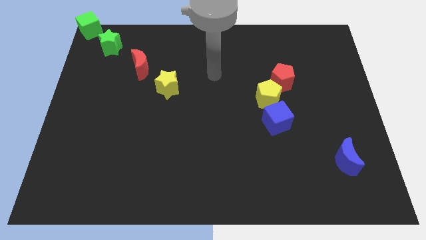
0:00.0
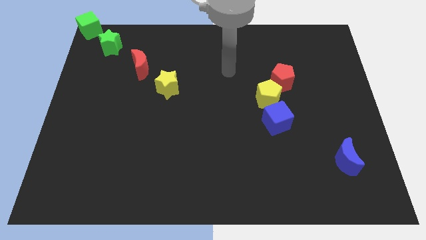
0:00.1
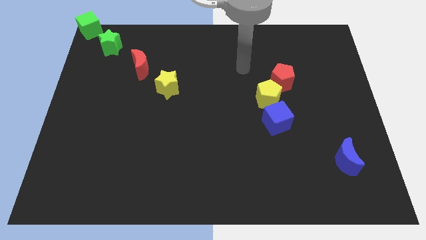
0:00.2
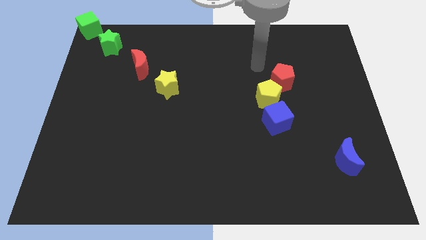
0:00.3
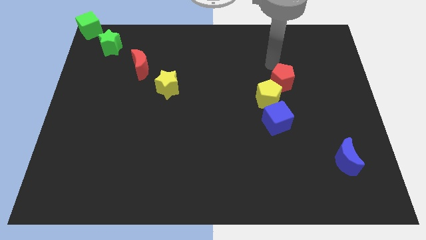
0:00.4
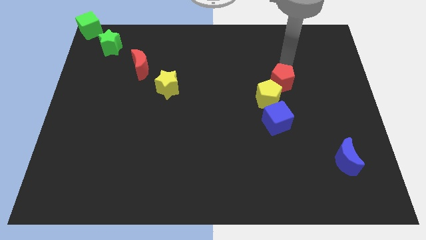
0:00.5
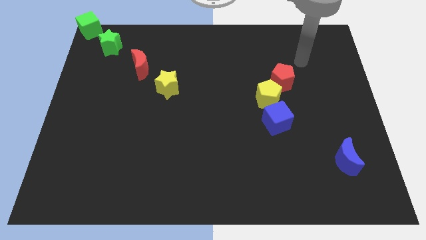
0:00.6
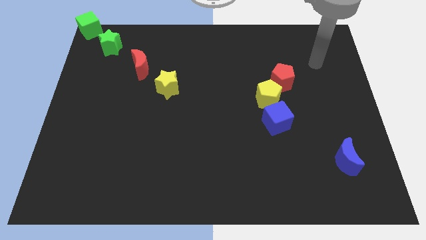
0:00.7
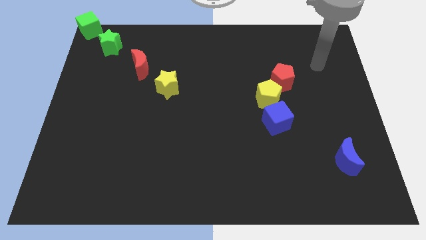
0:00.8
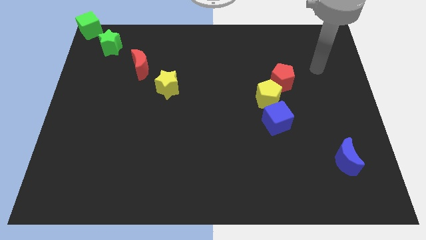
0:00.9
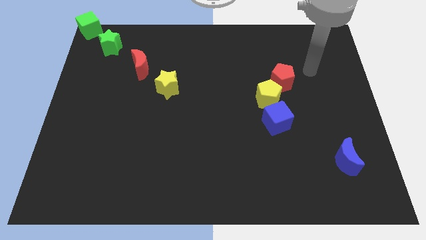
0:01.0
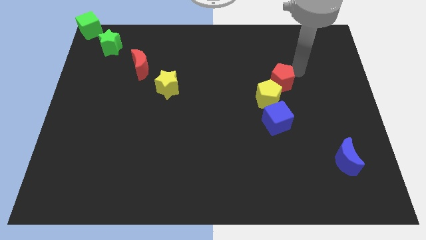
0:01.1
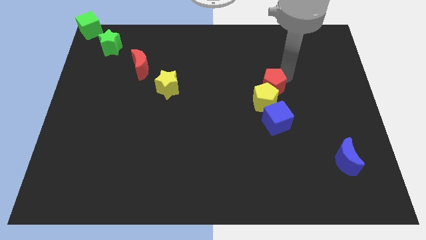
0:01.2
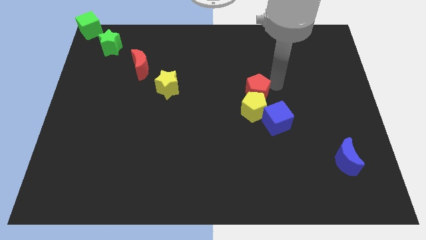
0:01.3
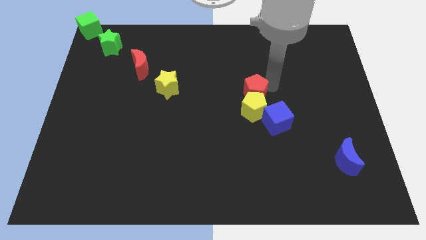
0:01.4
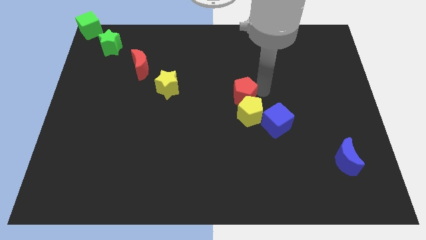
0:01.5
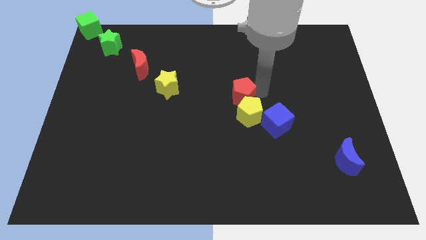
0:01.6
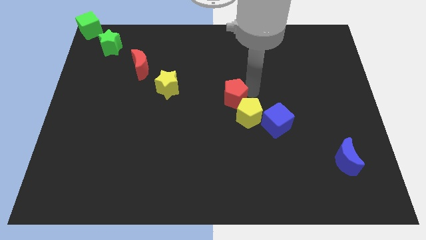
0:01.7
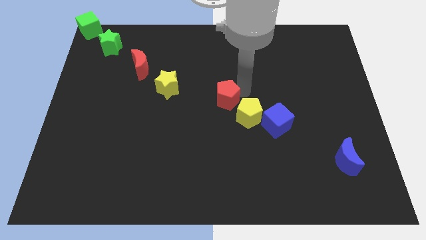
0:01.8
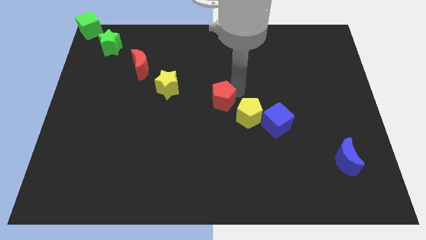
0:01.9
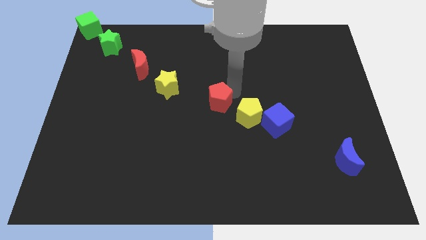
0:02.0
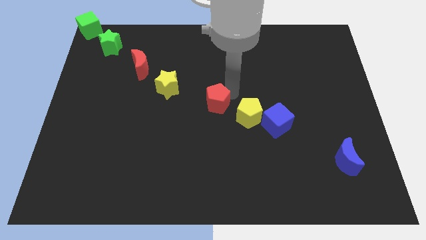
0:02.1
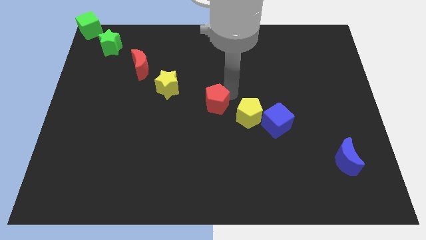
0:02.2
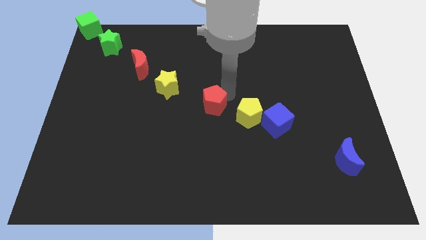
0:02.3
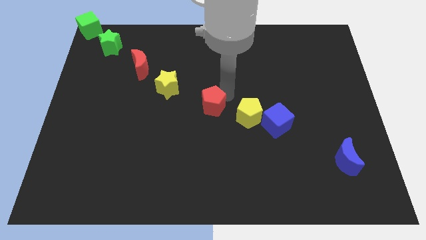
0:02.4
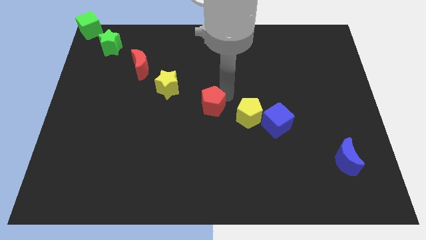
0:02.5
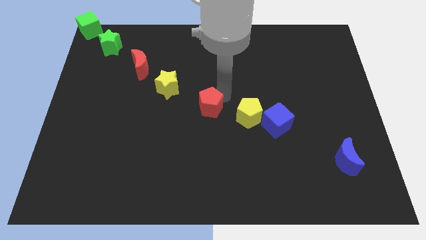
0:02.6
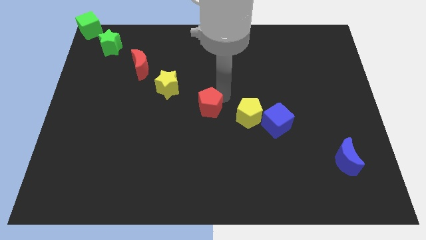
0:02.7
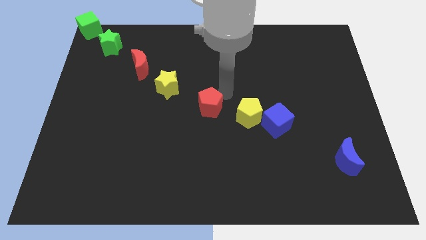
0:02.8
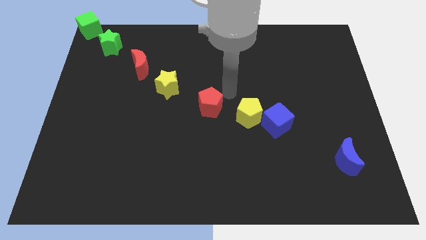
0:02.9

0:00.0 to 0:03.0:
move the red pentagon in between the yellow star and yellow pentagon

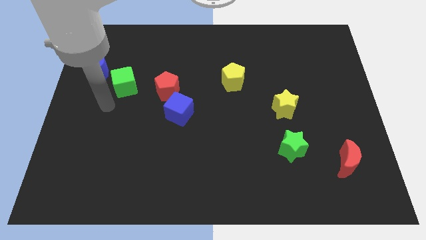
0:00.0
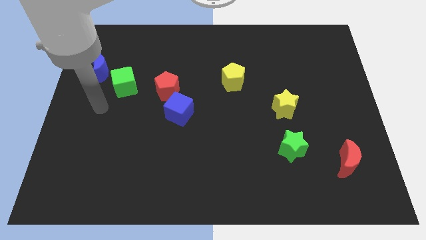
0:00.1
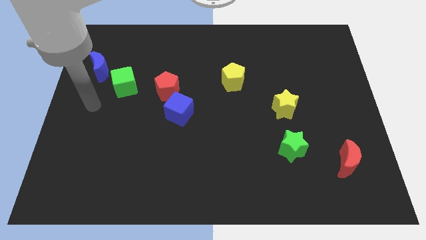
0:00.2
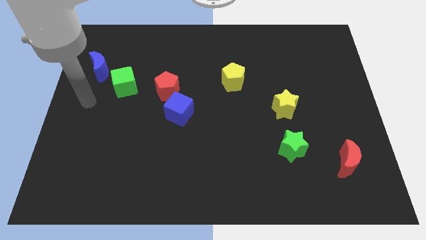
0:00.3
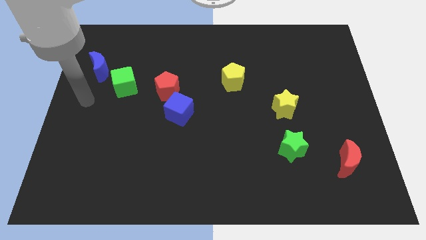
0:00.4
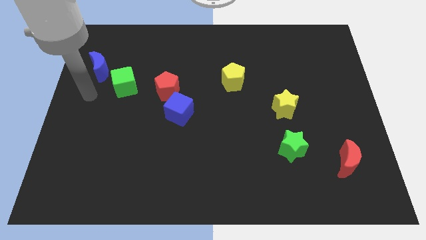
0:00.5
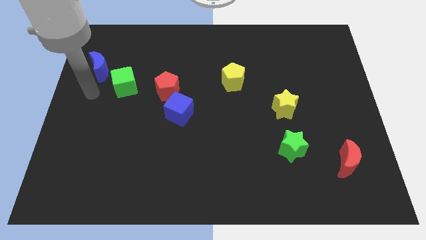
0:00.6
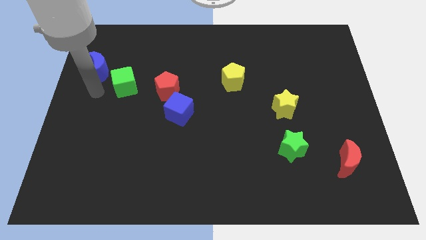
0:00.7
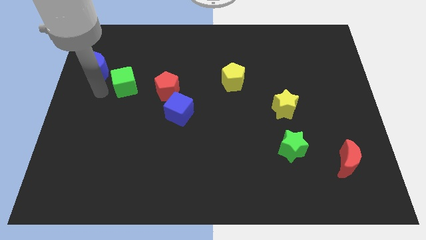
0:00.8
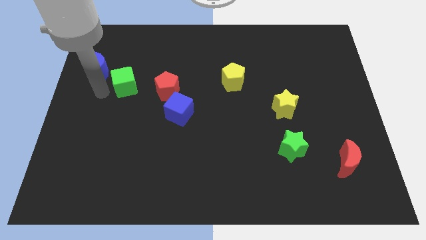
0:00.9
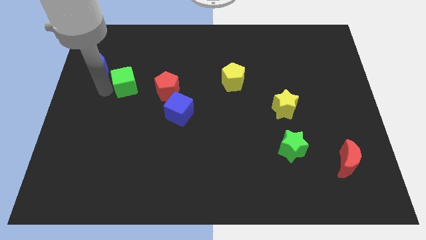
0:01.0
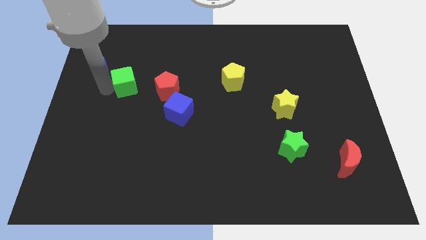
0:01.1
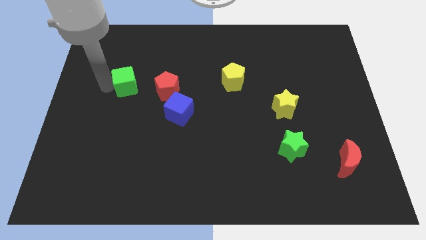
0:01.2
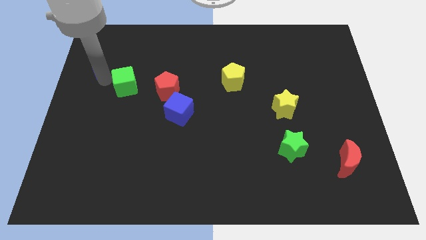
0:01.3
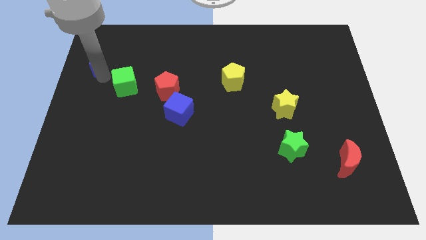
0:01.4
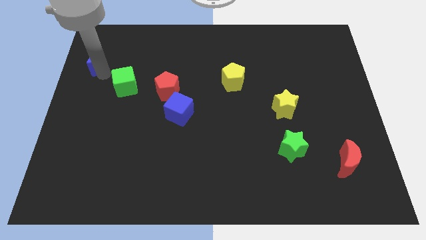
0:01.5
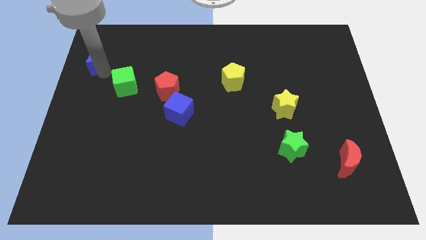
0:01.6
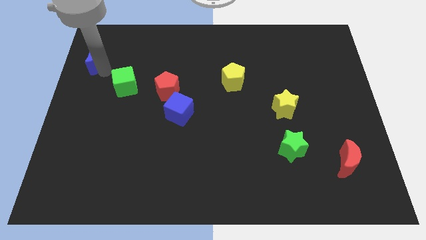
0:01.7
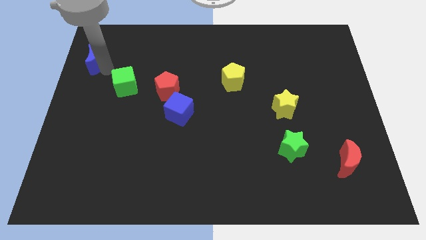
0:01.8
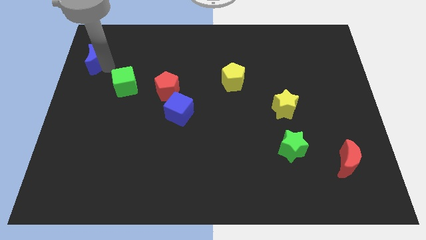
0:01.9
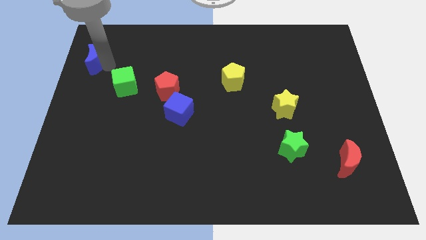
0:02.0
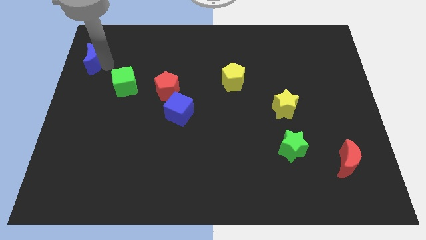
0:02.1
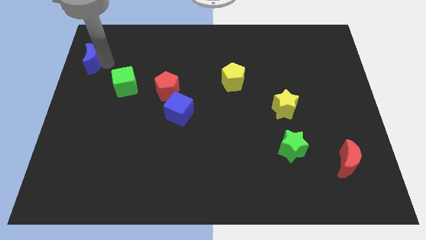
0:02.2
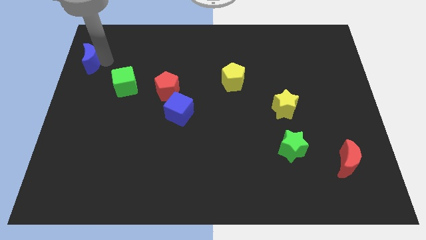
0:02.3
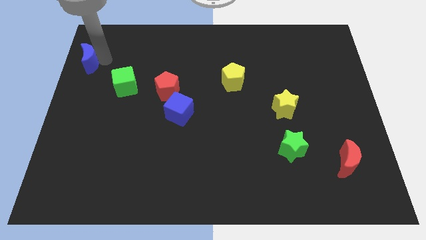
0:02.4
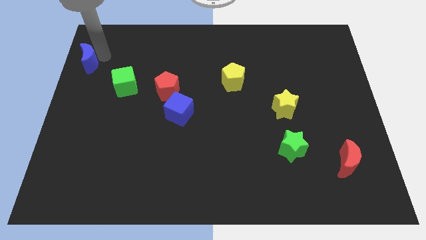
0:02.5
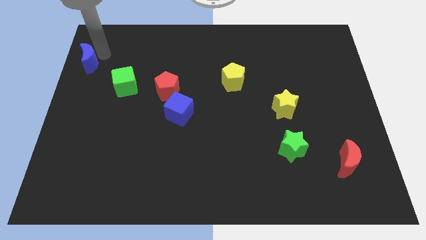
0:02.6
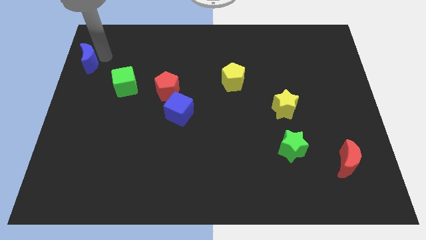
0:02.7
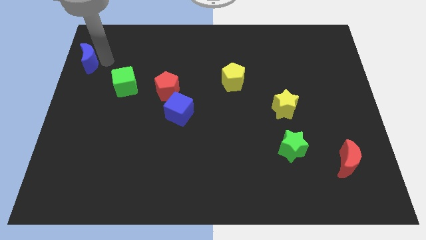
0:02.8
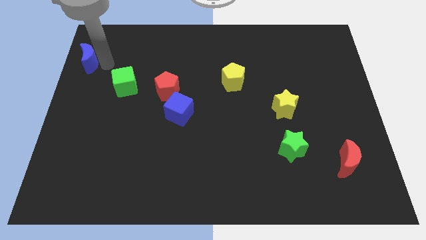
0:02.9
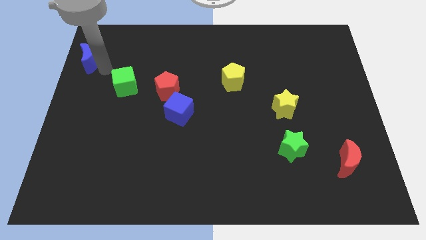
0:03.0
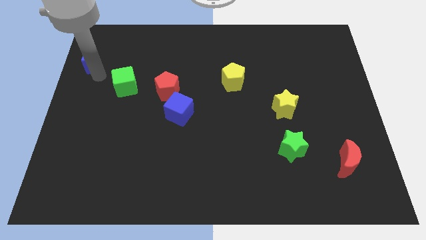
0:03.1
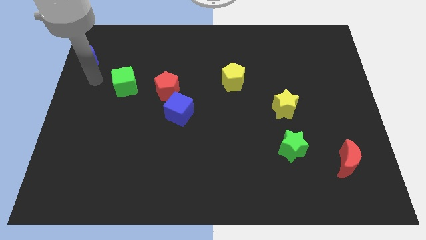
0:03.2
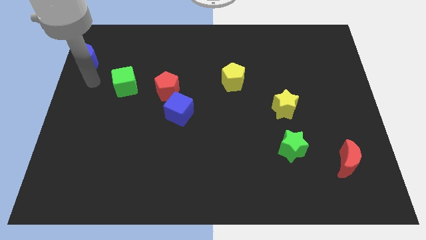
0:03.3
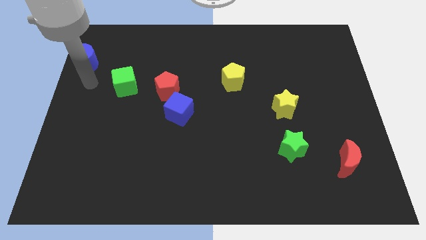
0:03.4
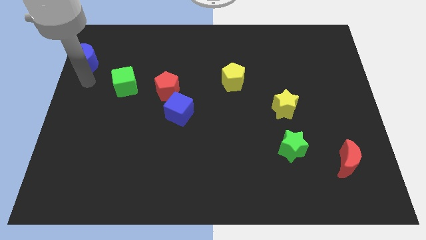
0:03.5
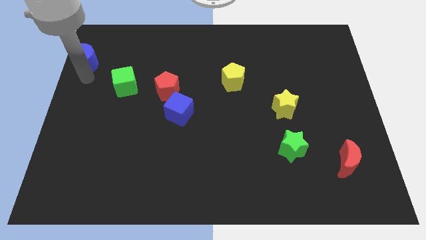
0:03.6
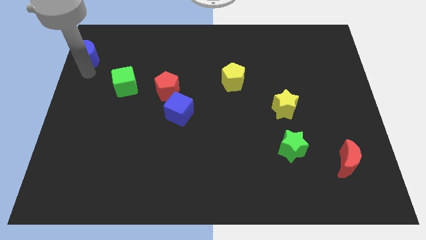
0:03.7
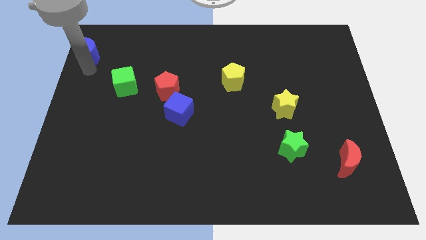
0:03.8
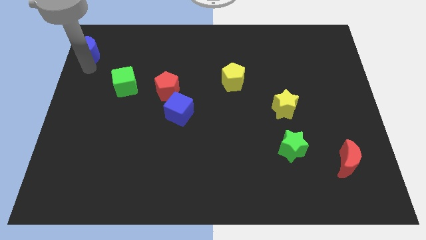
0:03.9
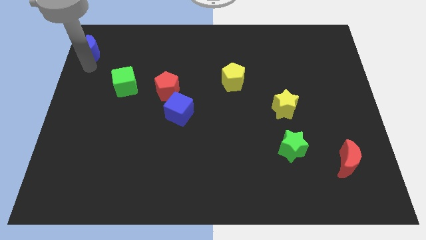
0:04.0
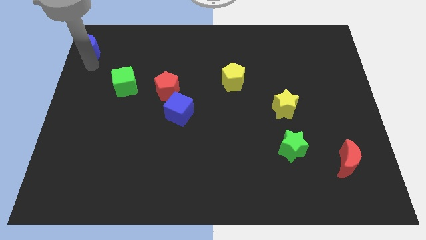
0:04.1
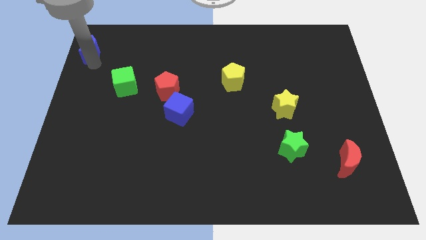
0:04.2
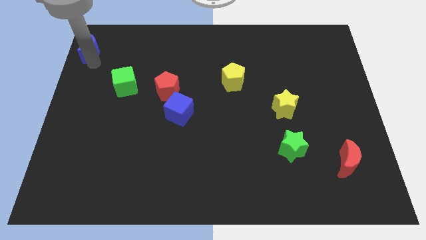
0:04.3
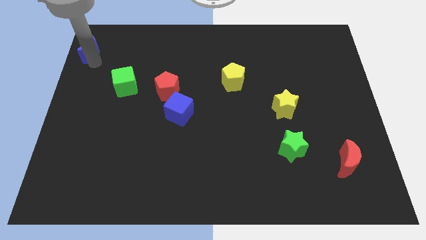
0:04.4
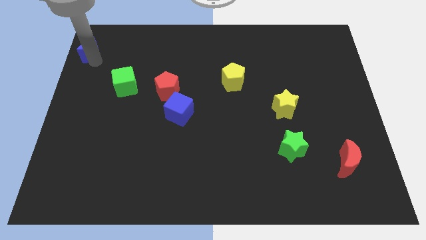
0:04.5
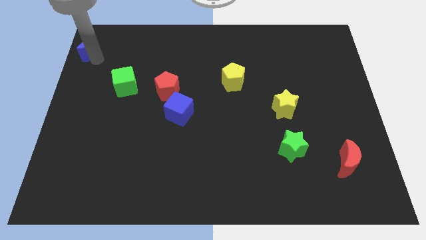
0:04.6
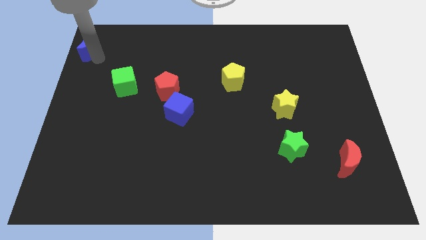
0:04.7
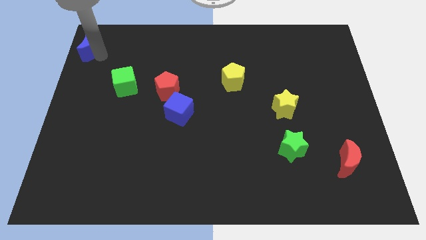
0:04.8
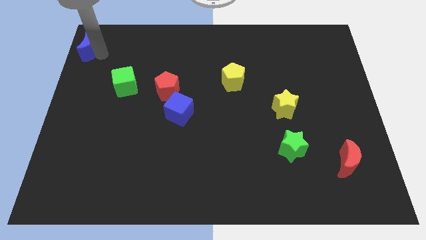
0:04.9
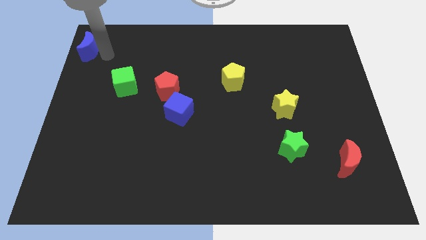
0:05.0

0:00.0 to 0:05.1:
push the blue crescent to the top left corner of the board

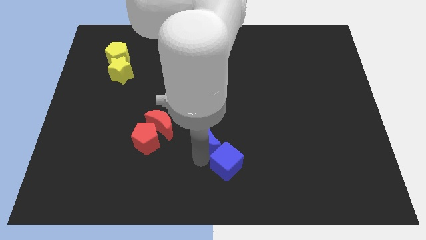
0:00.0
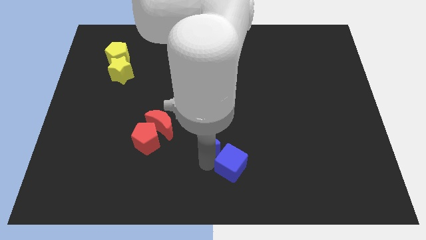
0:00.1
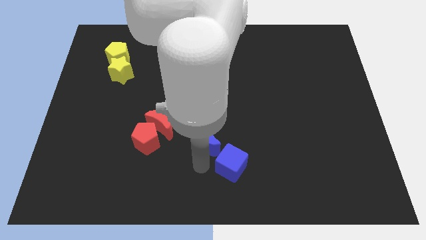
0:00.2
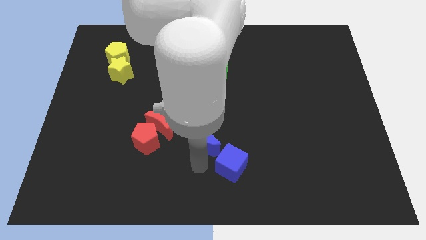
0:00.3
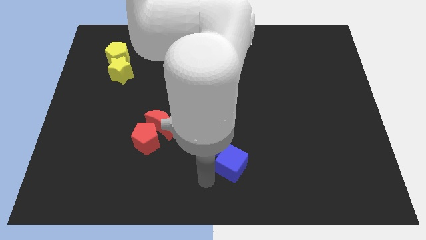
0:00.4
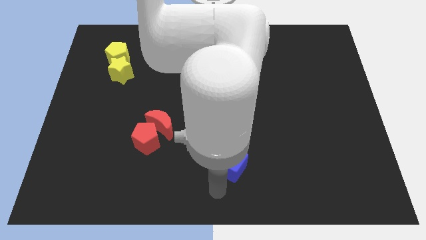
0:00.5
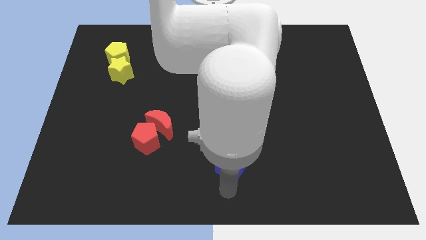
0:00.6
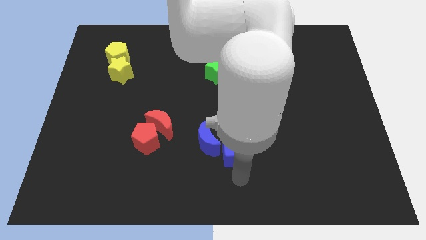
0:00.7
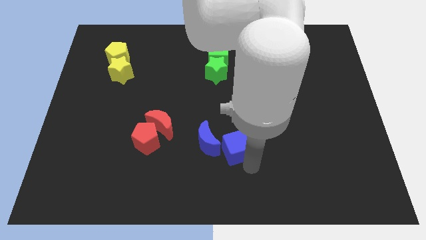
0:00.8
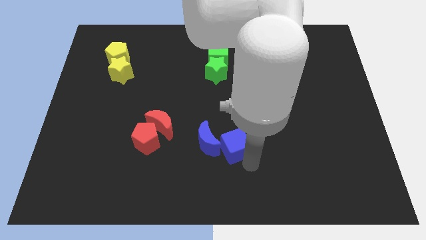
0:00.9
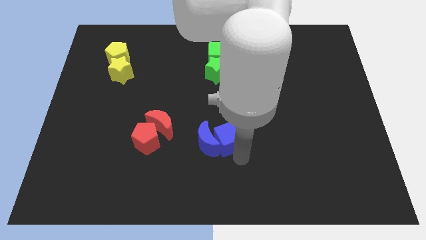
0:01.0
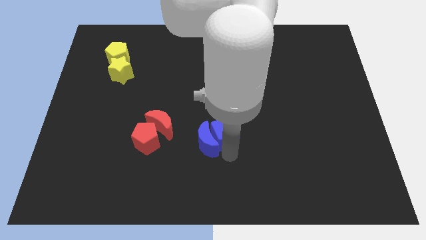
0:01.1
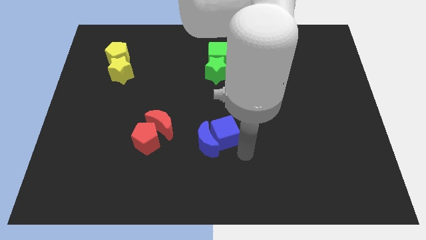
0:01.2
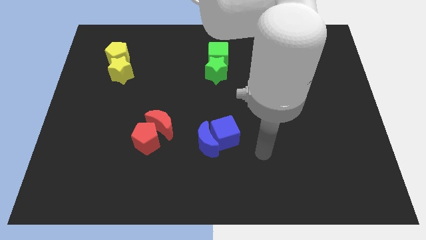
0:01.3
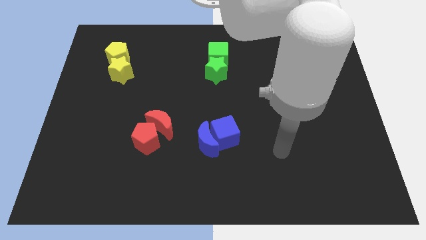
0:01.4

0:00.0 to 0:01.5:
push the blue cube close to the right of the blue crescent
